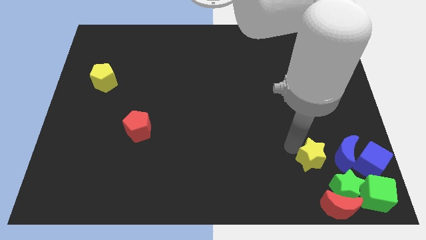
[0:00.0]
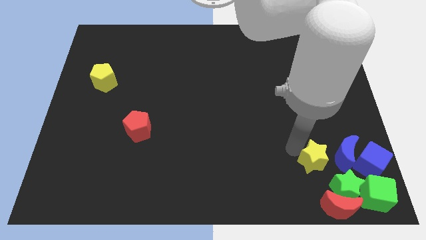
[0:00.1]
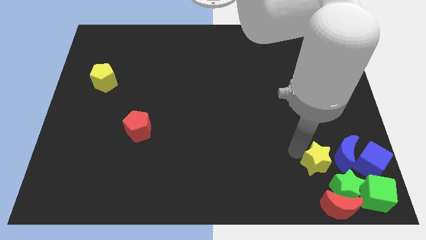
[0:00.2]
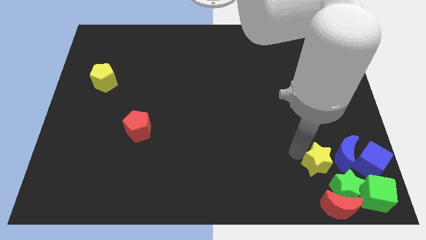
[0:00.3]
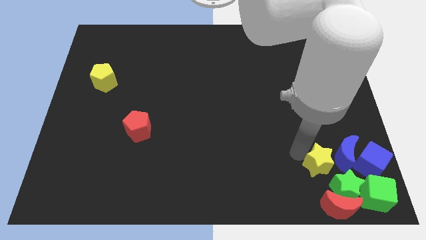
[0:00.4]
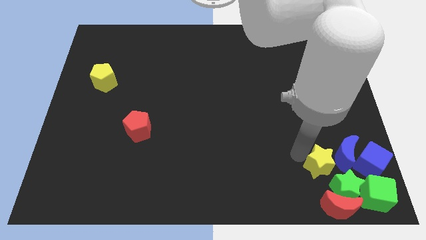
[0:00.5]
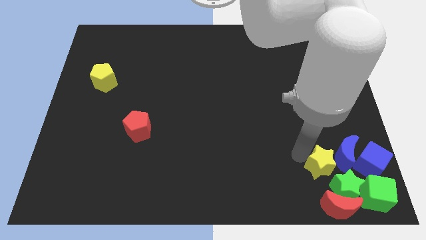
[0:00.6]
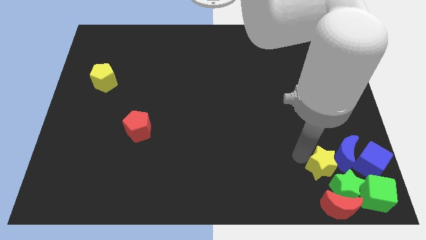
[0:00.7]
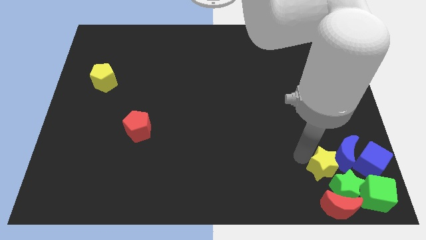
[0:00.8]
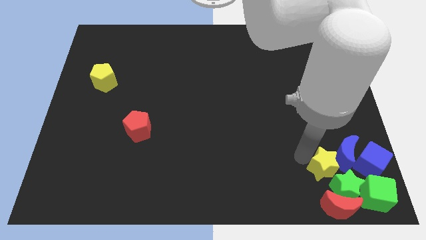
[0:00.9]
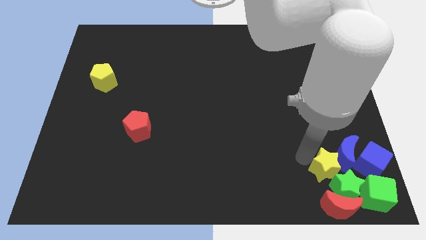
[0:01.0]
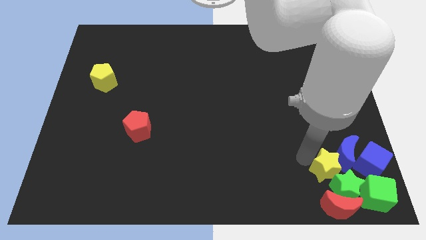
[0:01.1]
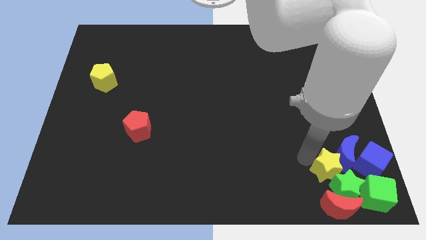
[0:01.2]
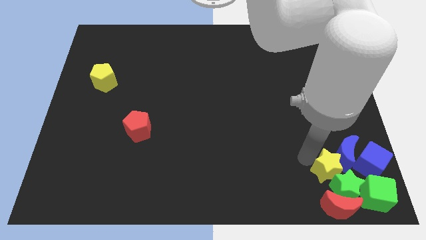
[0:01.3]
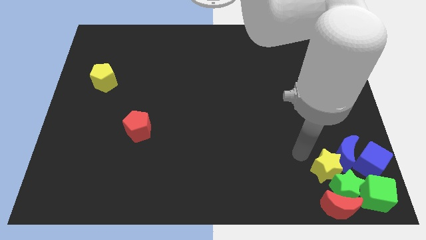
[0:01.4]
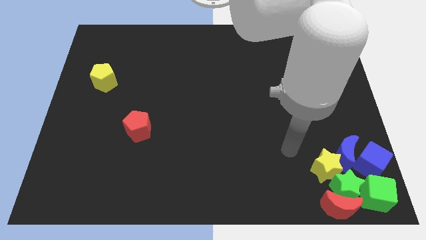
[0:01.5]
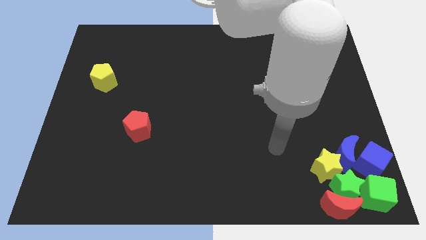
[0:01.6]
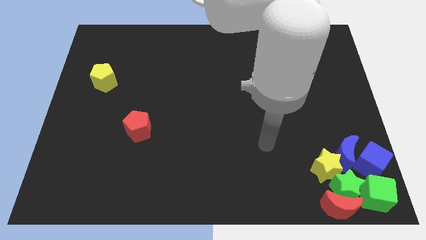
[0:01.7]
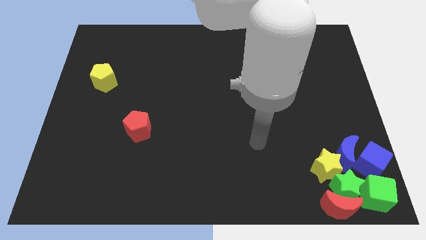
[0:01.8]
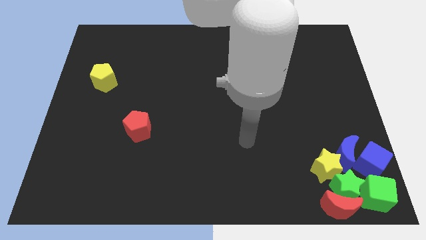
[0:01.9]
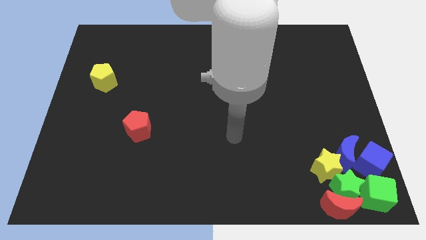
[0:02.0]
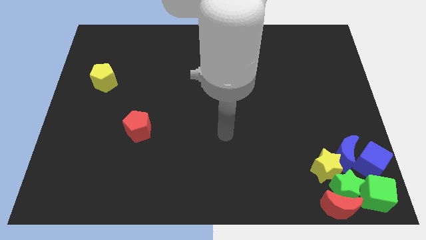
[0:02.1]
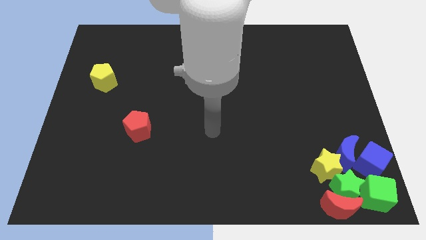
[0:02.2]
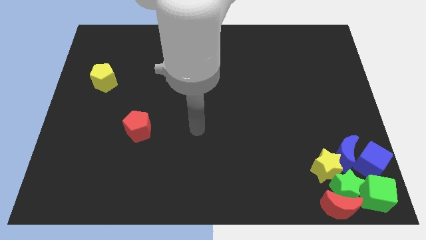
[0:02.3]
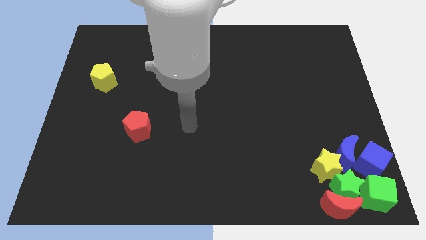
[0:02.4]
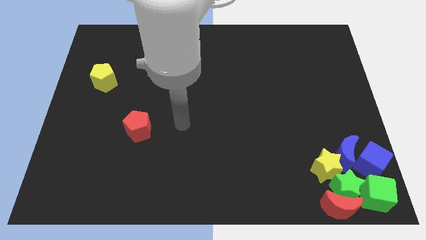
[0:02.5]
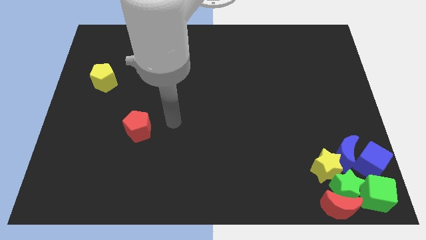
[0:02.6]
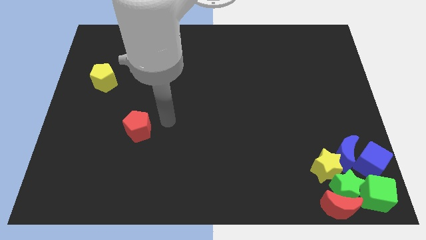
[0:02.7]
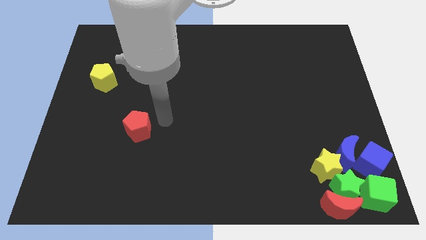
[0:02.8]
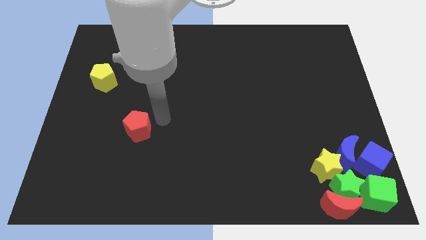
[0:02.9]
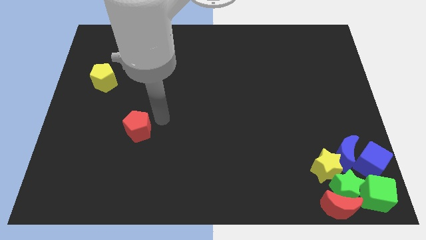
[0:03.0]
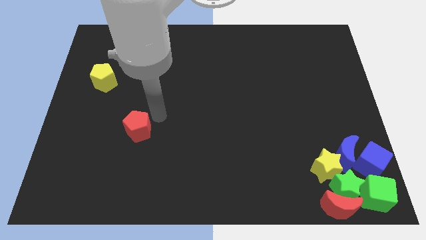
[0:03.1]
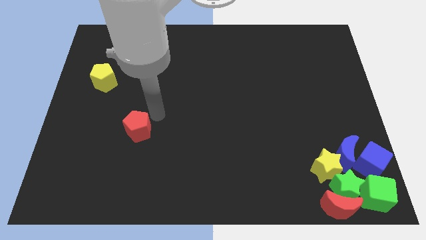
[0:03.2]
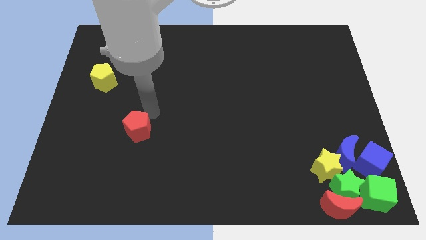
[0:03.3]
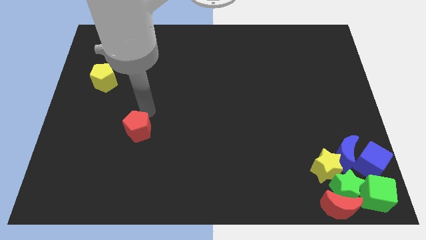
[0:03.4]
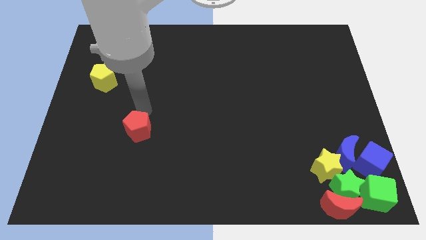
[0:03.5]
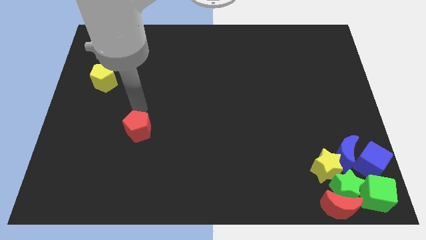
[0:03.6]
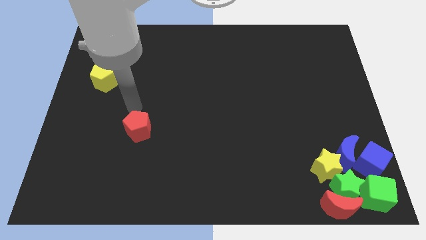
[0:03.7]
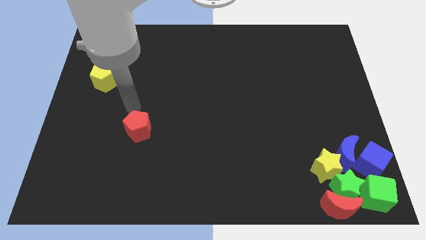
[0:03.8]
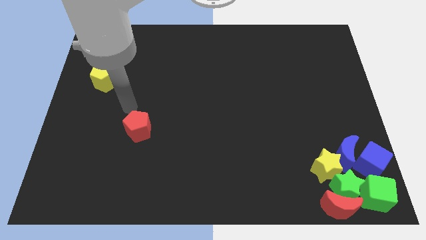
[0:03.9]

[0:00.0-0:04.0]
move your arm to the red pentagon

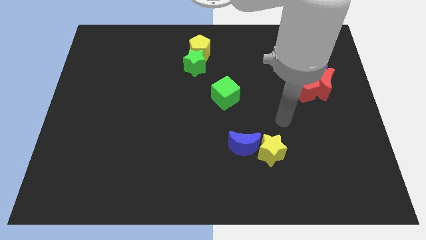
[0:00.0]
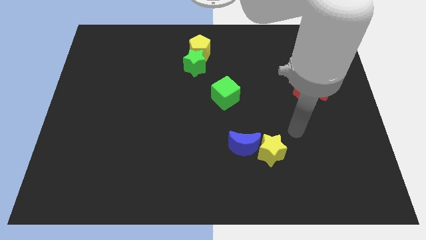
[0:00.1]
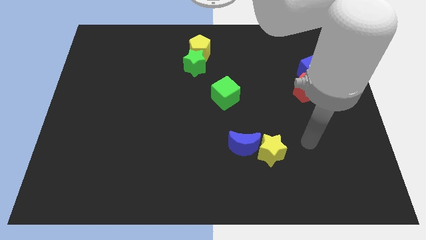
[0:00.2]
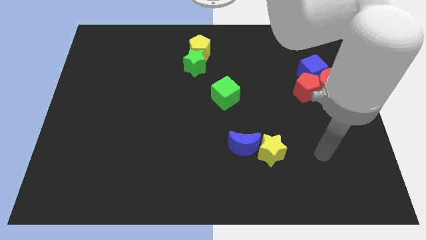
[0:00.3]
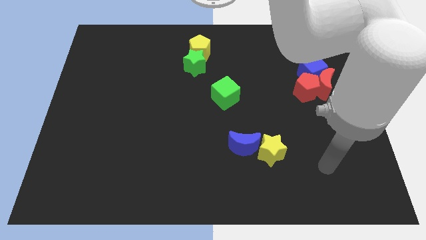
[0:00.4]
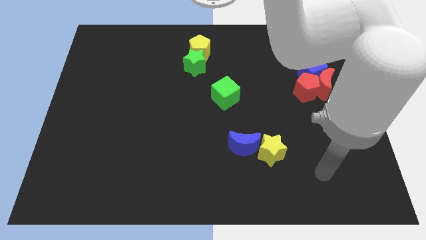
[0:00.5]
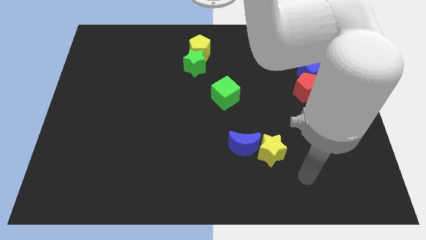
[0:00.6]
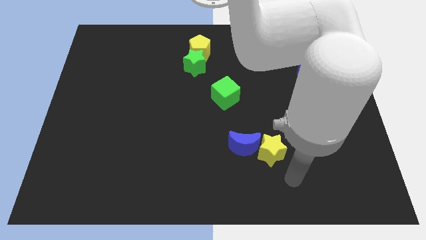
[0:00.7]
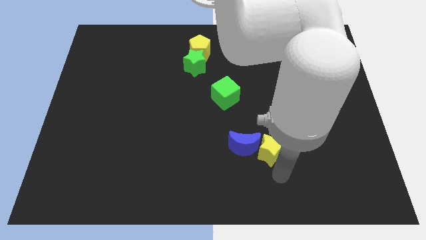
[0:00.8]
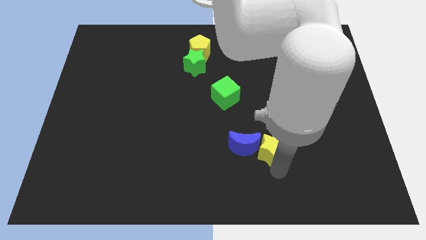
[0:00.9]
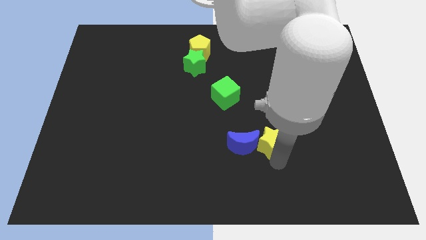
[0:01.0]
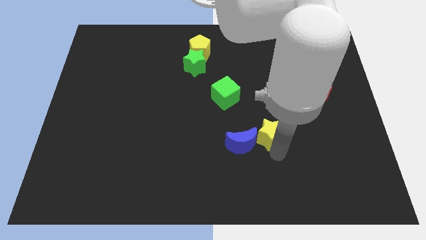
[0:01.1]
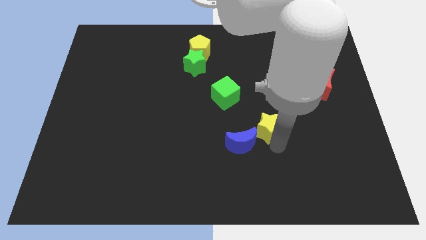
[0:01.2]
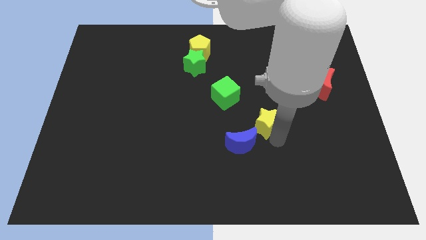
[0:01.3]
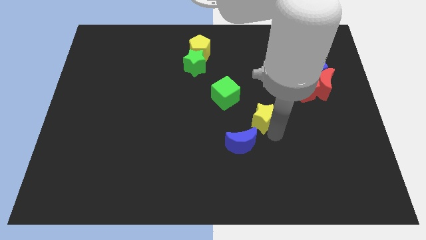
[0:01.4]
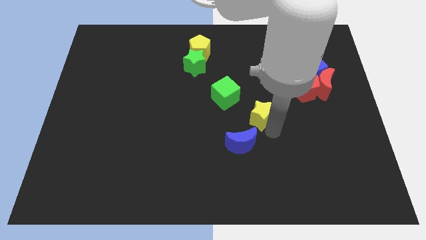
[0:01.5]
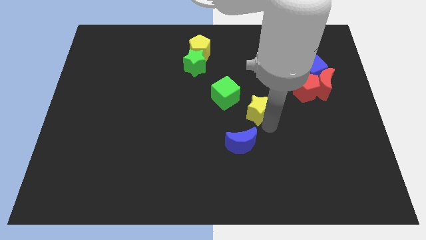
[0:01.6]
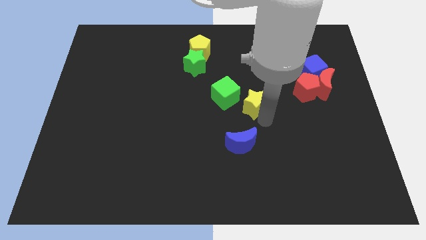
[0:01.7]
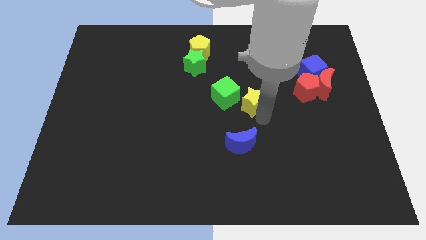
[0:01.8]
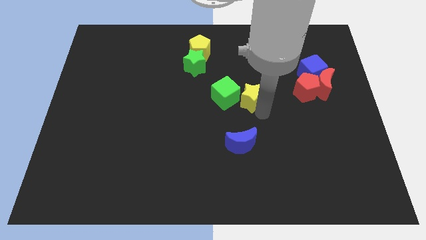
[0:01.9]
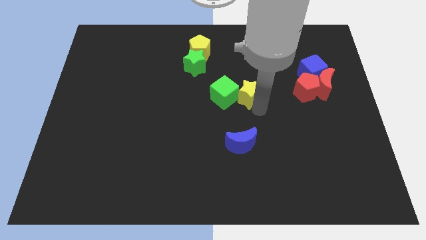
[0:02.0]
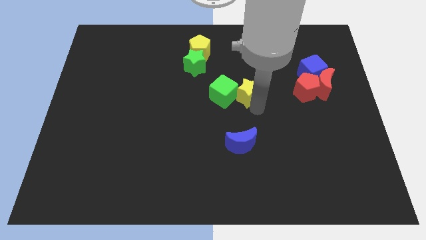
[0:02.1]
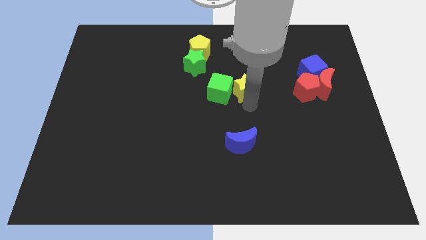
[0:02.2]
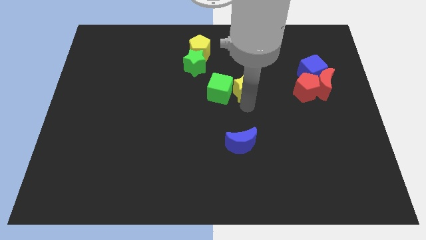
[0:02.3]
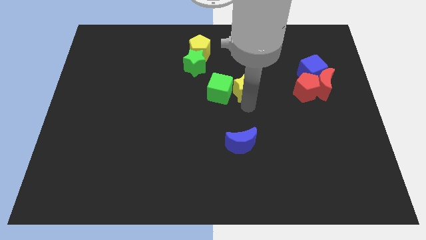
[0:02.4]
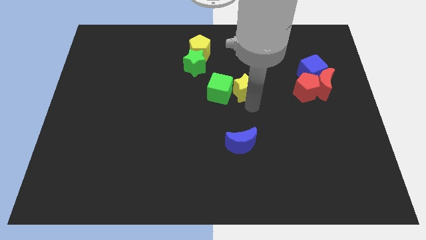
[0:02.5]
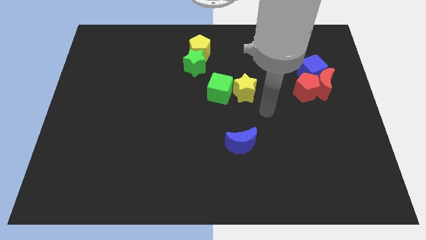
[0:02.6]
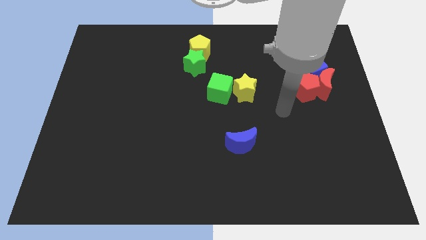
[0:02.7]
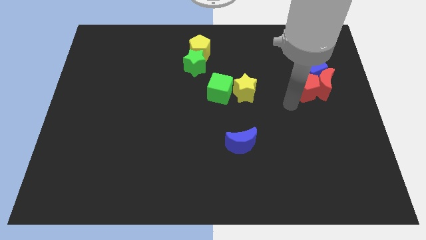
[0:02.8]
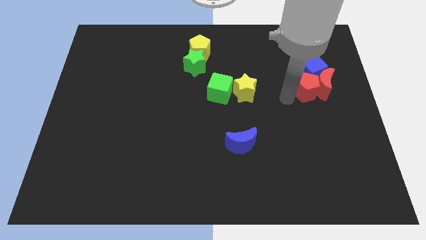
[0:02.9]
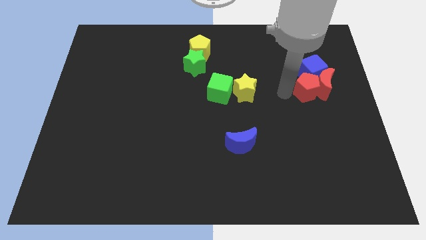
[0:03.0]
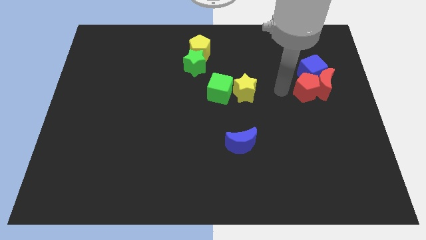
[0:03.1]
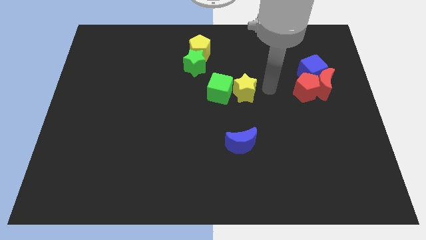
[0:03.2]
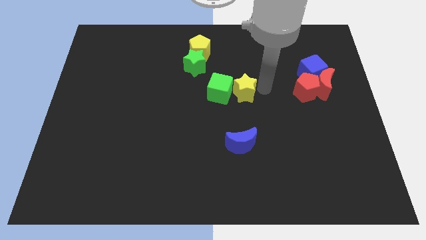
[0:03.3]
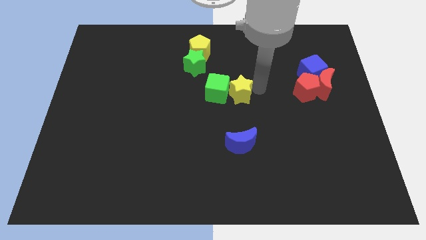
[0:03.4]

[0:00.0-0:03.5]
place yellow star next to green cube

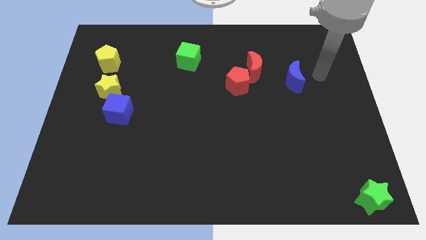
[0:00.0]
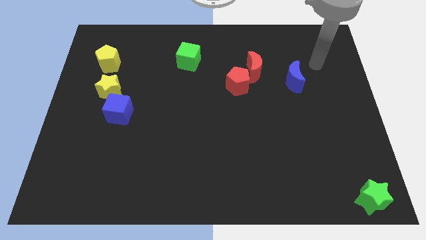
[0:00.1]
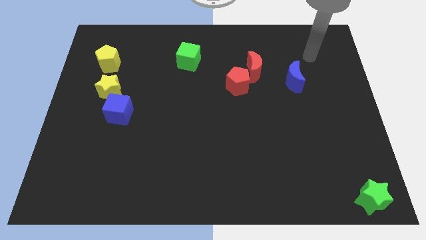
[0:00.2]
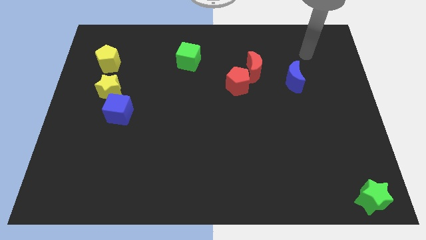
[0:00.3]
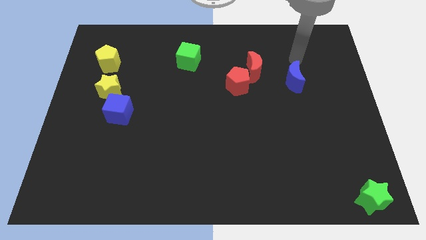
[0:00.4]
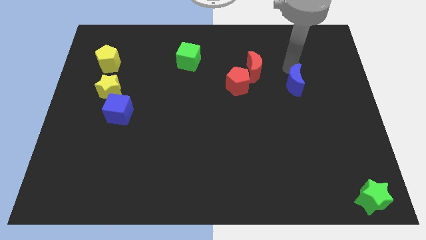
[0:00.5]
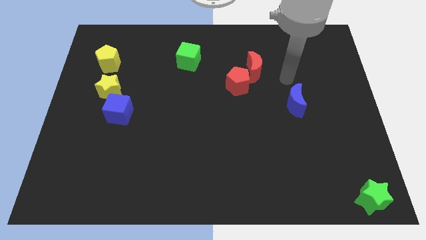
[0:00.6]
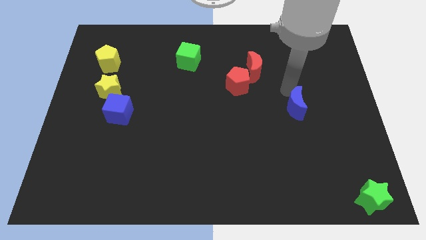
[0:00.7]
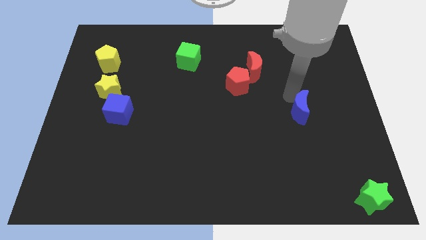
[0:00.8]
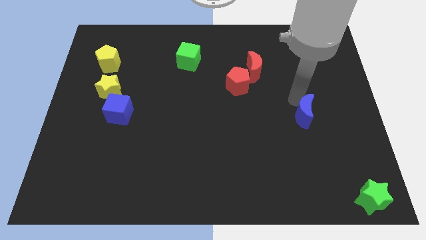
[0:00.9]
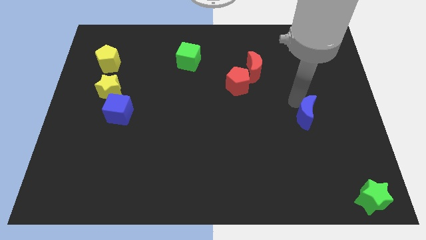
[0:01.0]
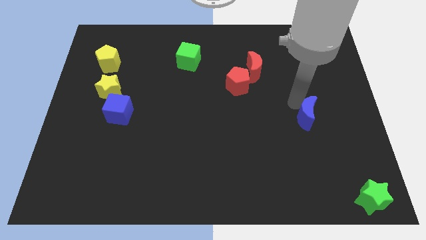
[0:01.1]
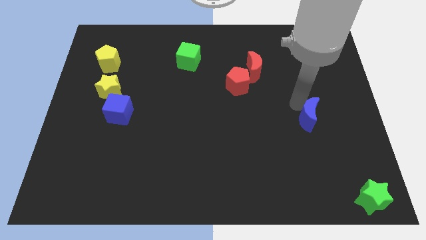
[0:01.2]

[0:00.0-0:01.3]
push blue moon towards the bottom of the board

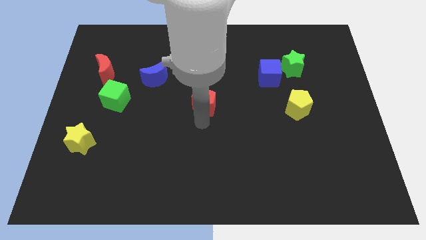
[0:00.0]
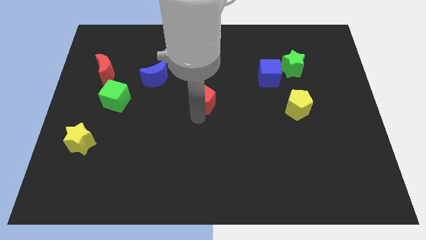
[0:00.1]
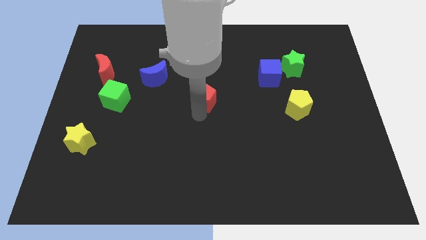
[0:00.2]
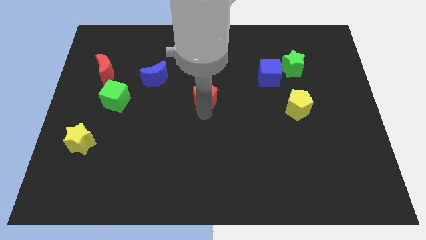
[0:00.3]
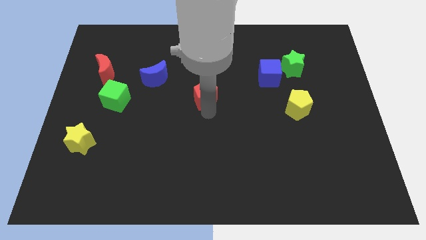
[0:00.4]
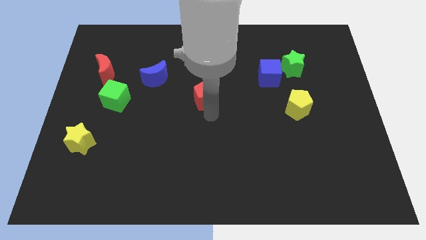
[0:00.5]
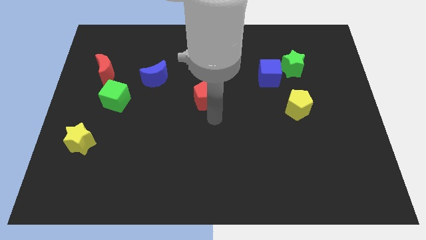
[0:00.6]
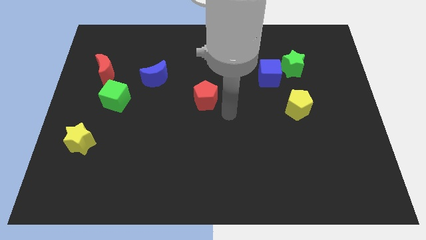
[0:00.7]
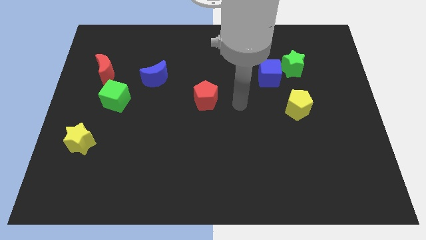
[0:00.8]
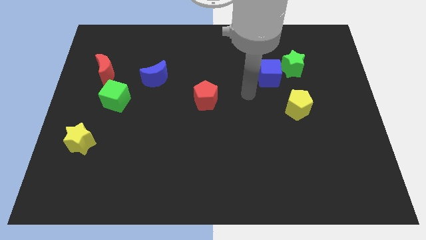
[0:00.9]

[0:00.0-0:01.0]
push the red pentagon slightly upwards and go away
